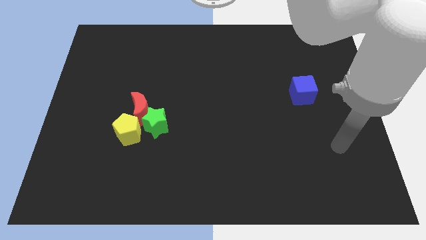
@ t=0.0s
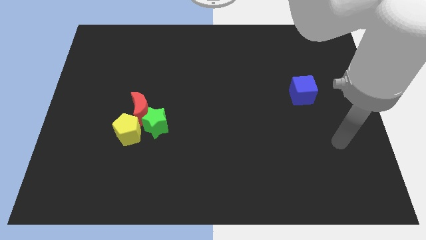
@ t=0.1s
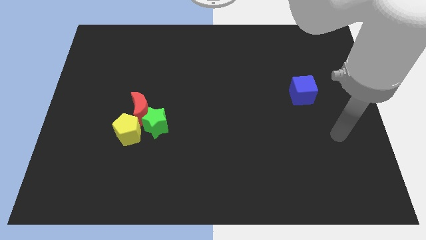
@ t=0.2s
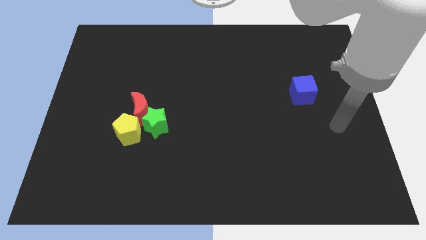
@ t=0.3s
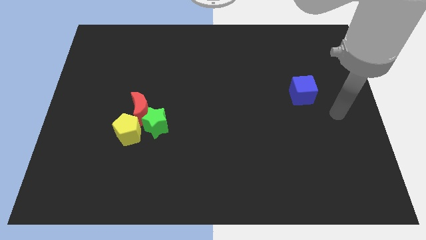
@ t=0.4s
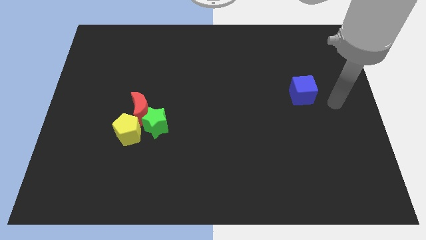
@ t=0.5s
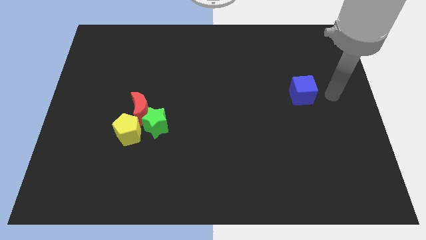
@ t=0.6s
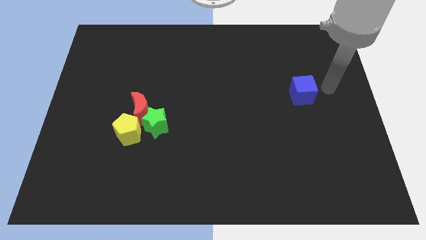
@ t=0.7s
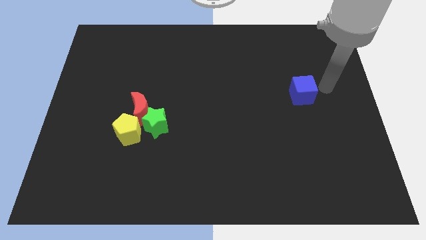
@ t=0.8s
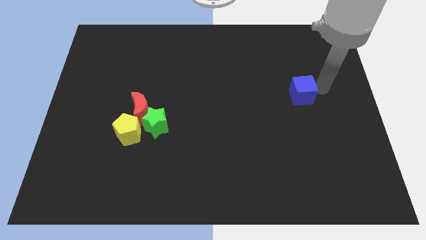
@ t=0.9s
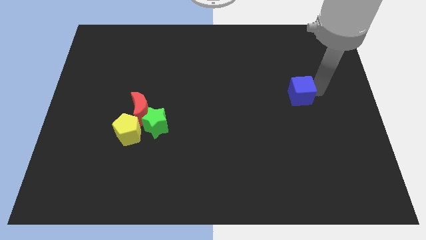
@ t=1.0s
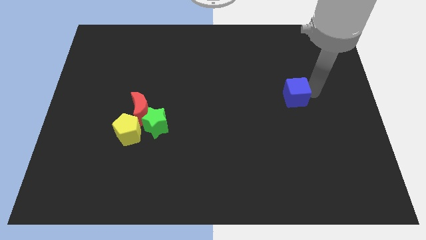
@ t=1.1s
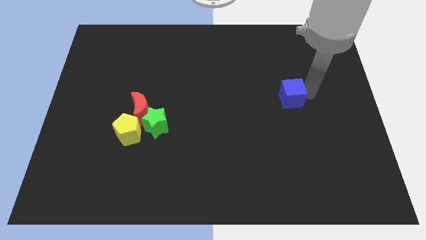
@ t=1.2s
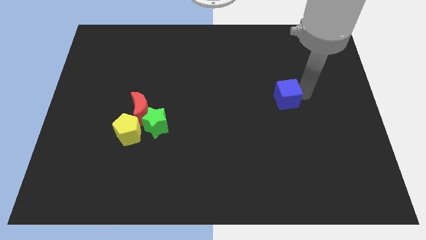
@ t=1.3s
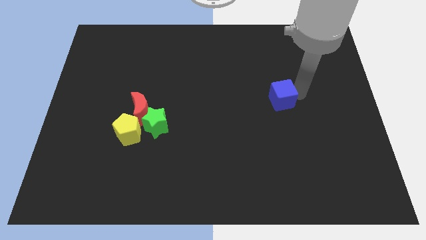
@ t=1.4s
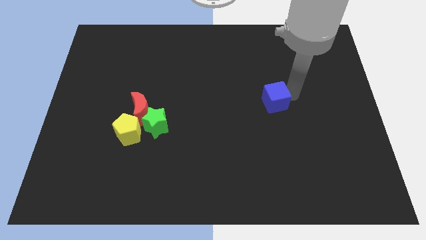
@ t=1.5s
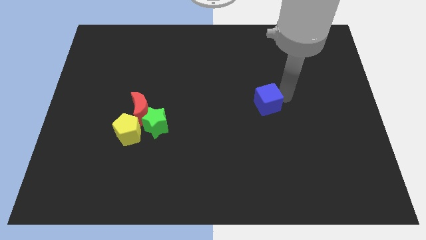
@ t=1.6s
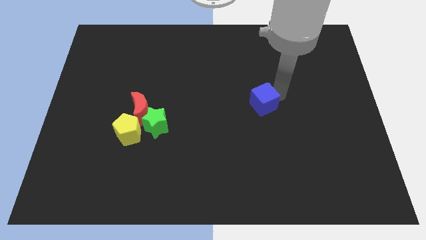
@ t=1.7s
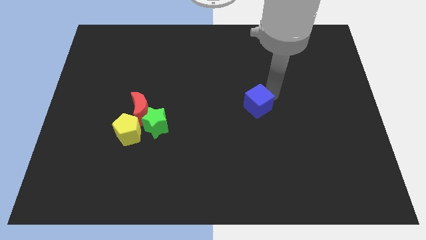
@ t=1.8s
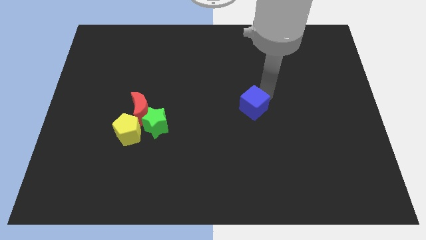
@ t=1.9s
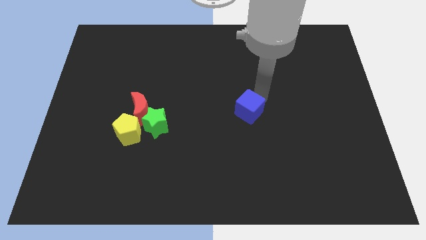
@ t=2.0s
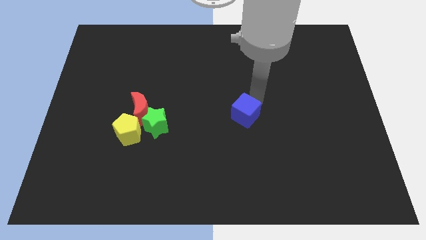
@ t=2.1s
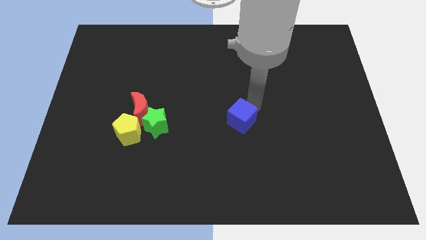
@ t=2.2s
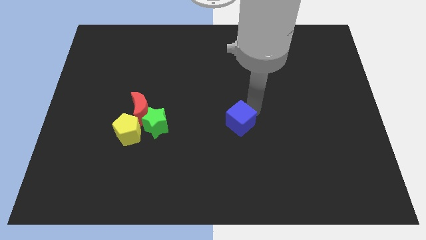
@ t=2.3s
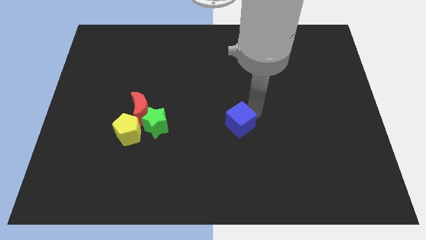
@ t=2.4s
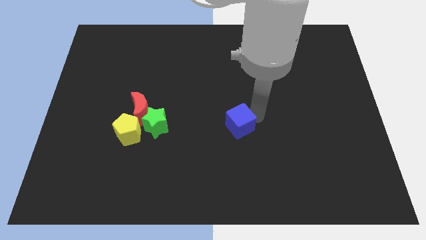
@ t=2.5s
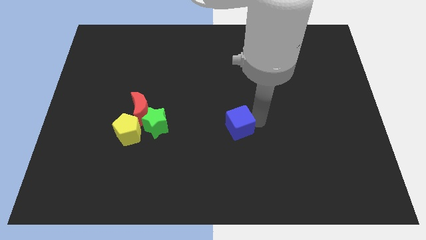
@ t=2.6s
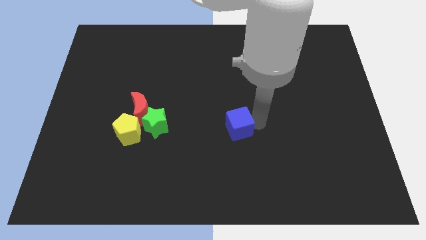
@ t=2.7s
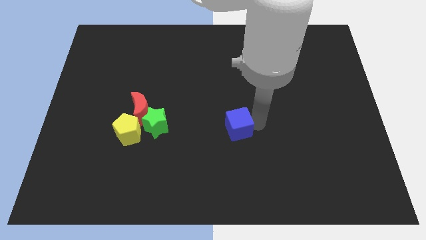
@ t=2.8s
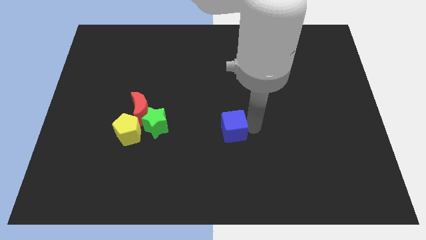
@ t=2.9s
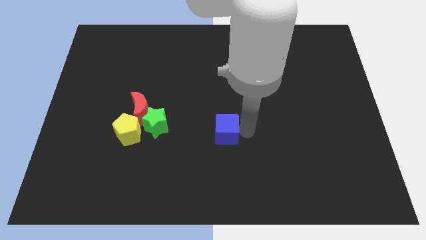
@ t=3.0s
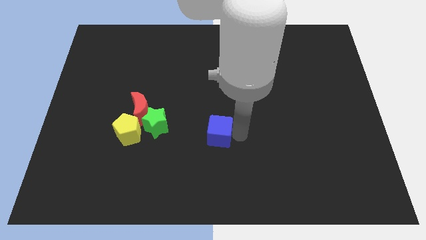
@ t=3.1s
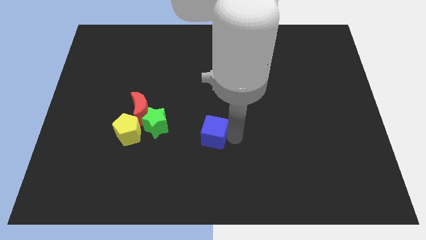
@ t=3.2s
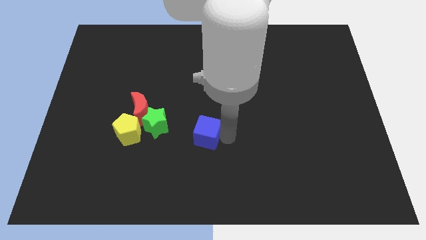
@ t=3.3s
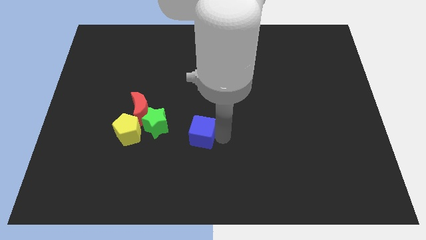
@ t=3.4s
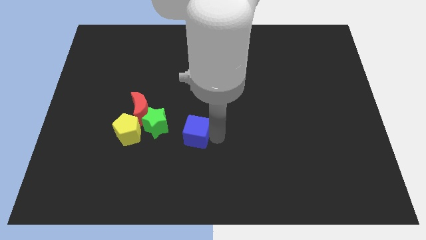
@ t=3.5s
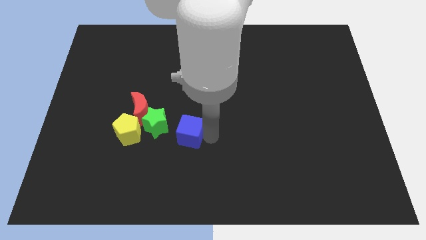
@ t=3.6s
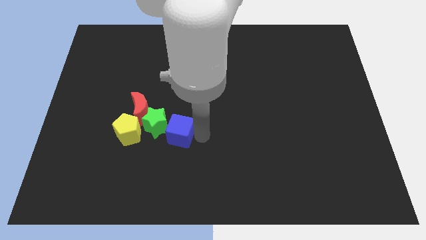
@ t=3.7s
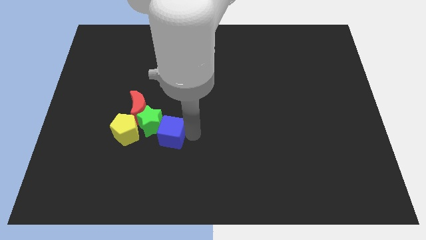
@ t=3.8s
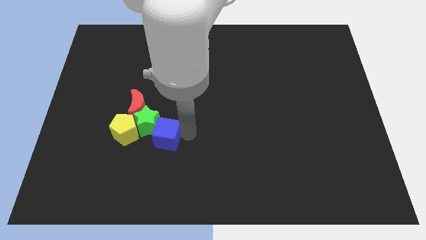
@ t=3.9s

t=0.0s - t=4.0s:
slide the cube towards the green block

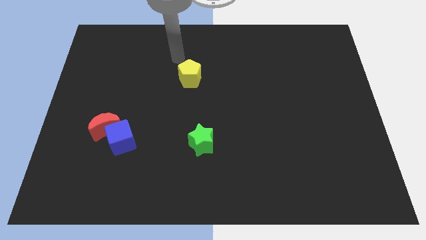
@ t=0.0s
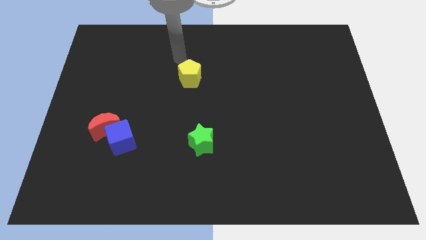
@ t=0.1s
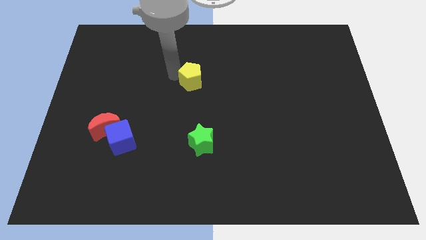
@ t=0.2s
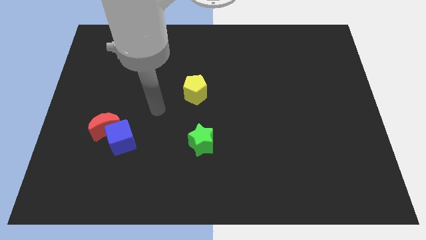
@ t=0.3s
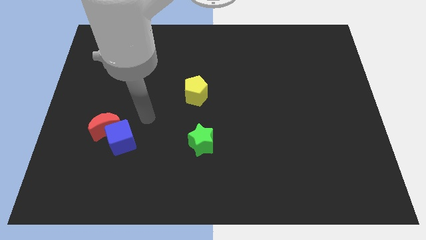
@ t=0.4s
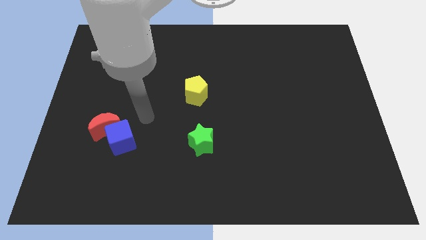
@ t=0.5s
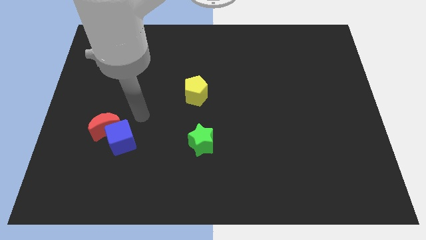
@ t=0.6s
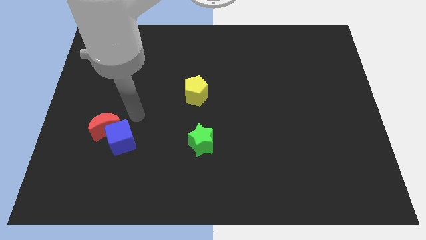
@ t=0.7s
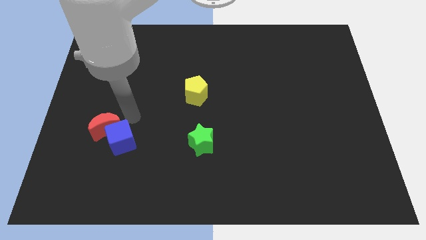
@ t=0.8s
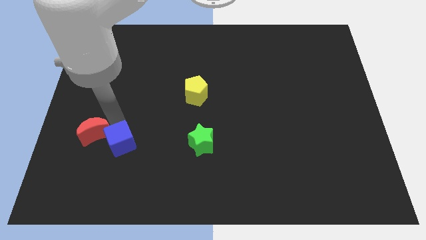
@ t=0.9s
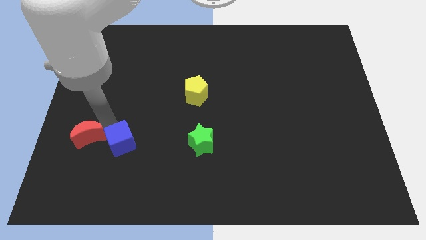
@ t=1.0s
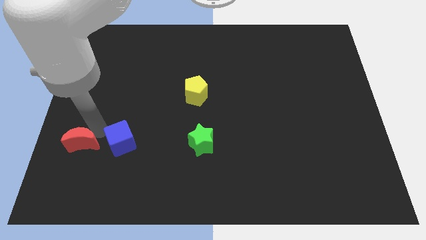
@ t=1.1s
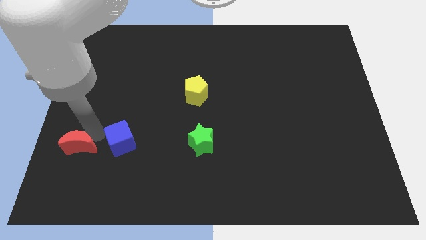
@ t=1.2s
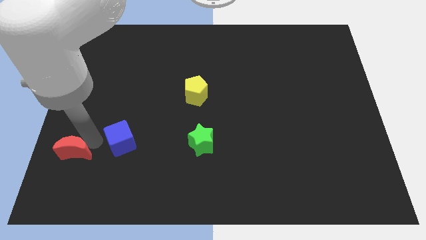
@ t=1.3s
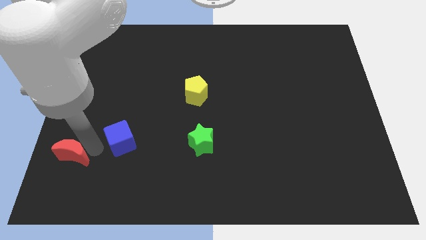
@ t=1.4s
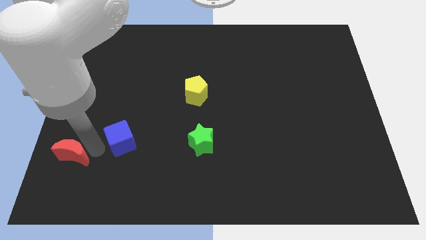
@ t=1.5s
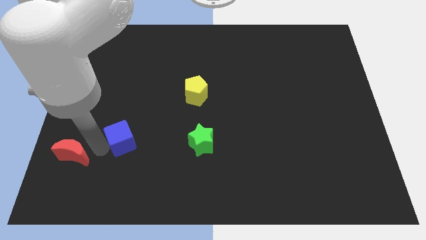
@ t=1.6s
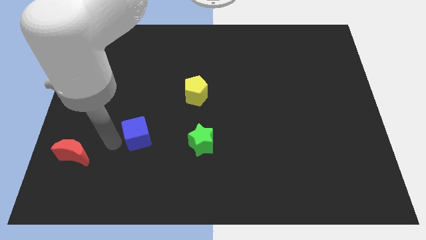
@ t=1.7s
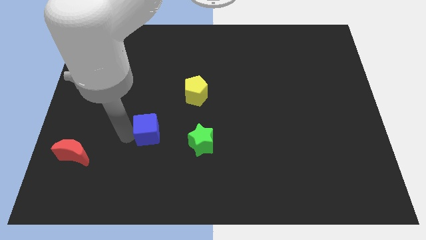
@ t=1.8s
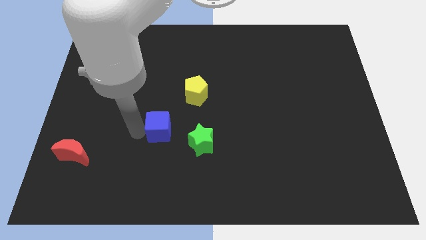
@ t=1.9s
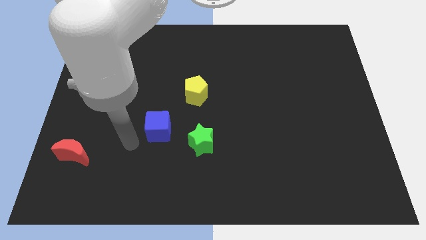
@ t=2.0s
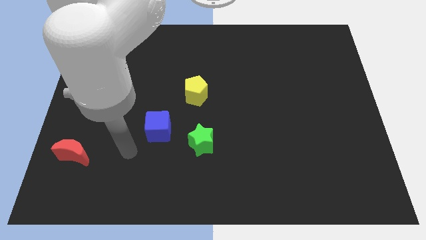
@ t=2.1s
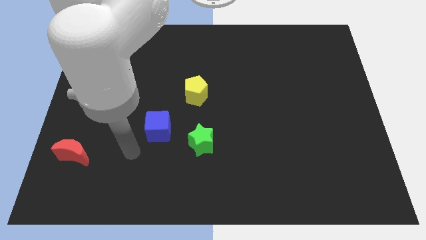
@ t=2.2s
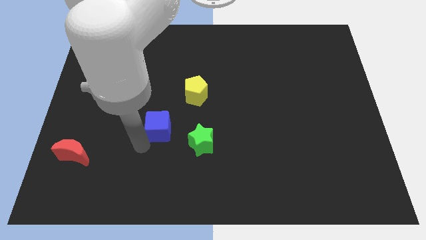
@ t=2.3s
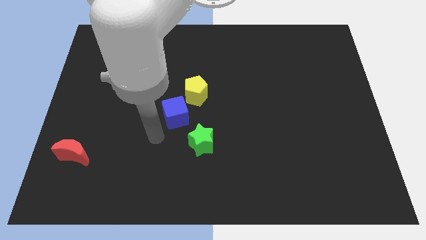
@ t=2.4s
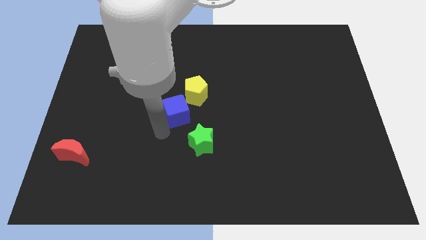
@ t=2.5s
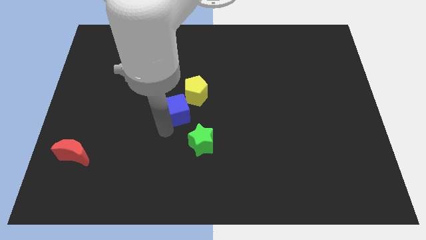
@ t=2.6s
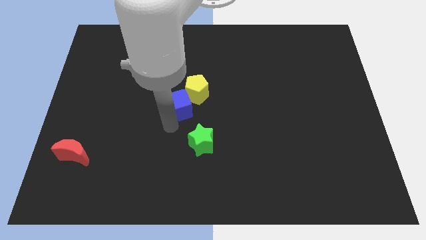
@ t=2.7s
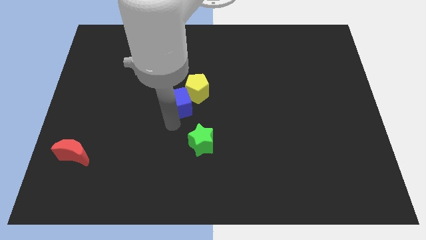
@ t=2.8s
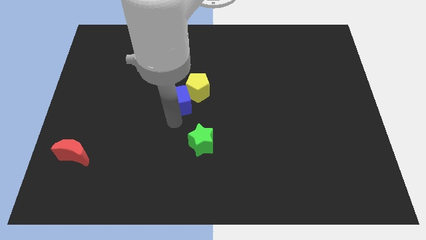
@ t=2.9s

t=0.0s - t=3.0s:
push the blue block next to the yellow pentagon

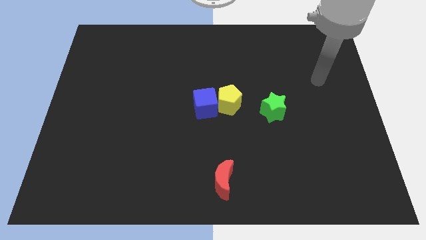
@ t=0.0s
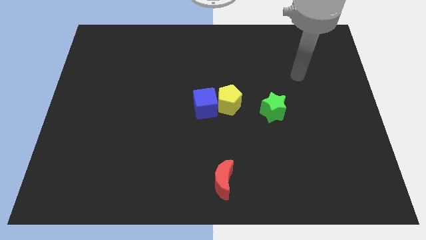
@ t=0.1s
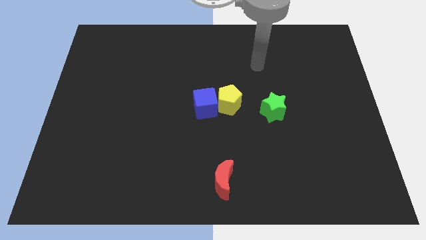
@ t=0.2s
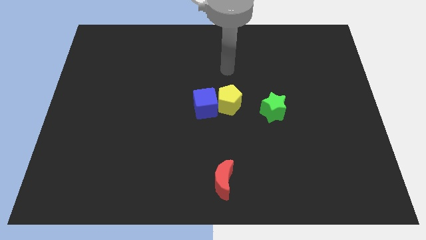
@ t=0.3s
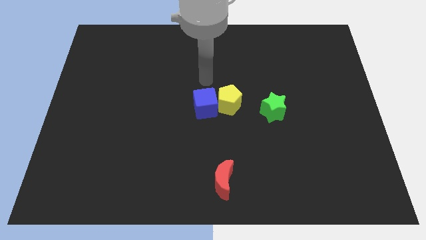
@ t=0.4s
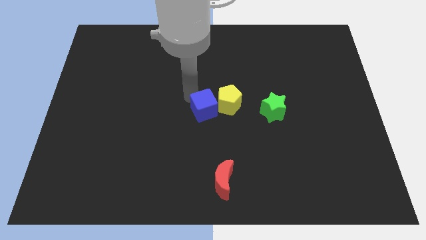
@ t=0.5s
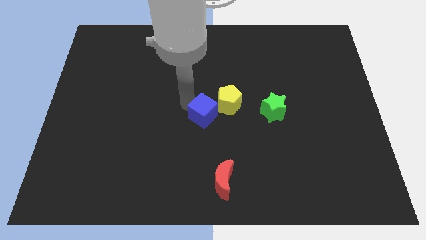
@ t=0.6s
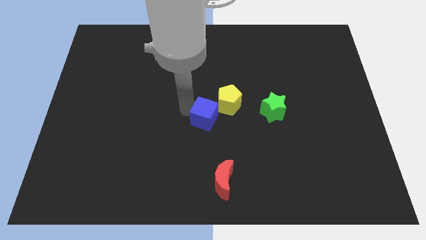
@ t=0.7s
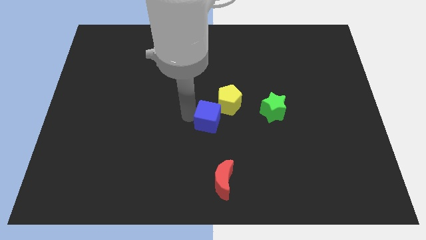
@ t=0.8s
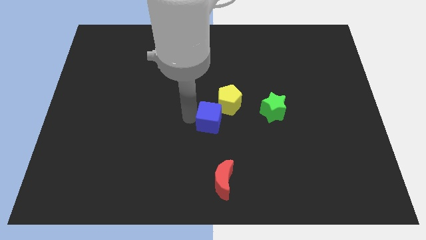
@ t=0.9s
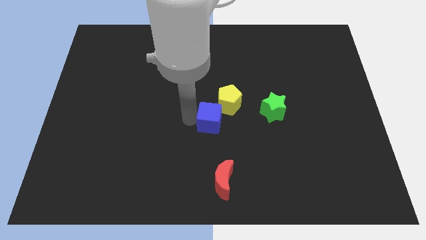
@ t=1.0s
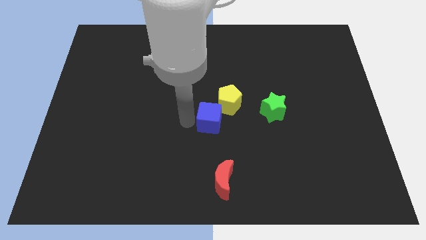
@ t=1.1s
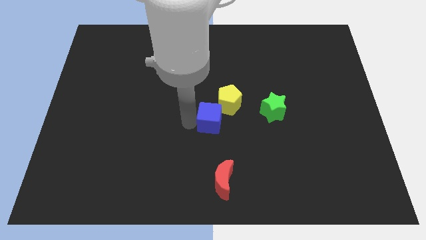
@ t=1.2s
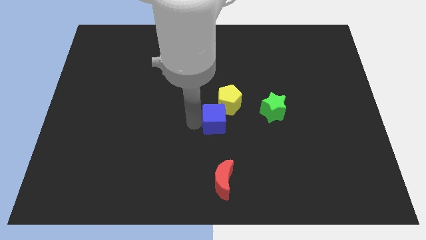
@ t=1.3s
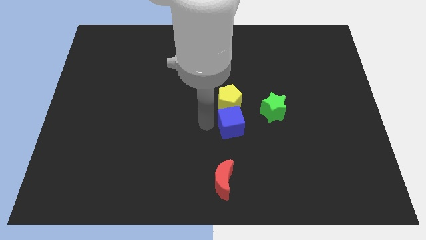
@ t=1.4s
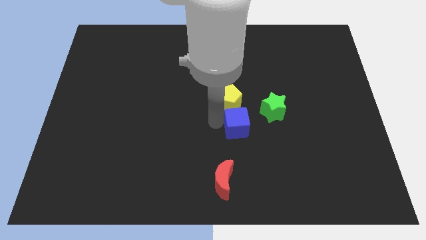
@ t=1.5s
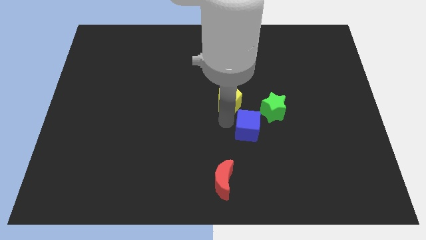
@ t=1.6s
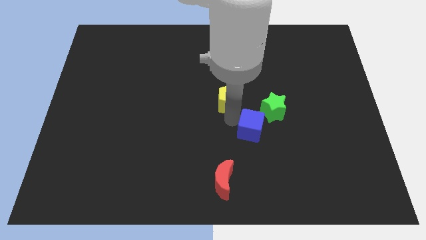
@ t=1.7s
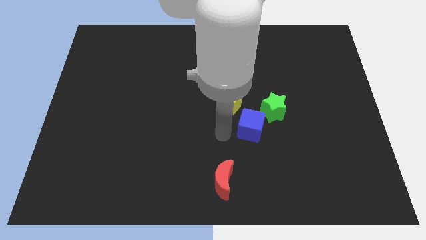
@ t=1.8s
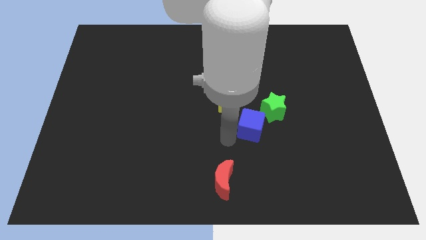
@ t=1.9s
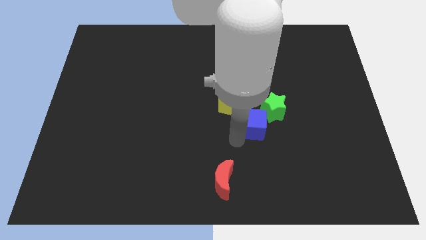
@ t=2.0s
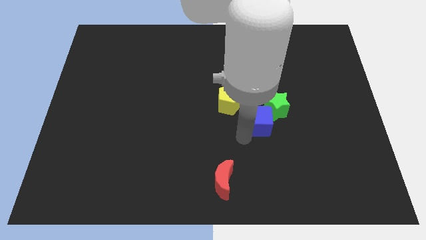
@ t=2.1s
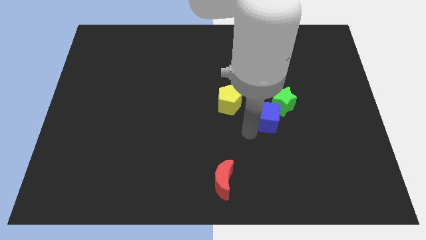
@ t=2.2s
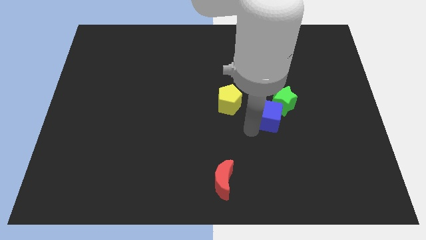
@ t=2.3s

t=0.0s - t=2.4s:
move the blue cube next to the green block
